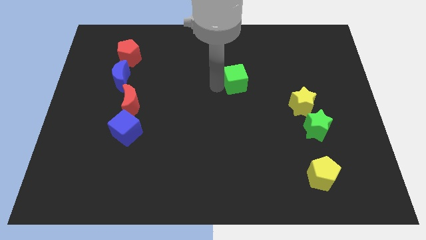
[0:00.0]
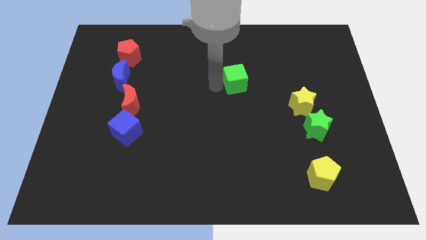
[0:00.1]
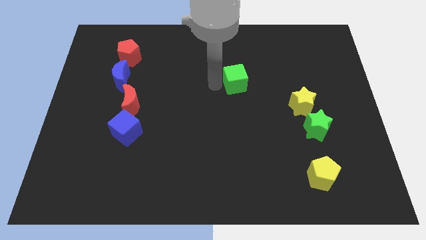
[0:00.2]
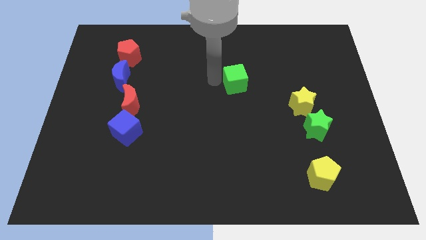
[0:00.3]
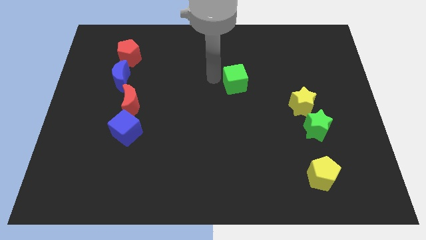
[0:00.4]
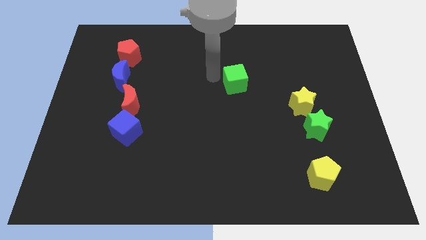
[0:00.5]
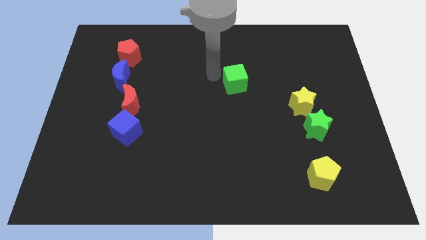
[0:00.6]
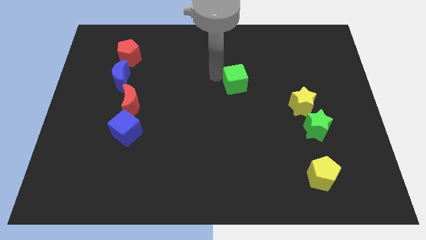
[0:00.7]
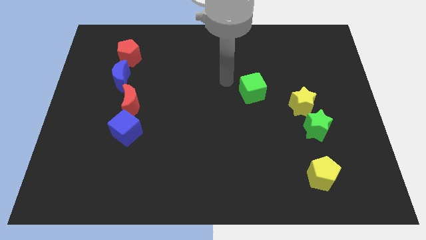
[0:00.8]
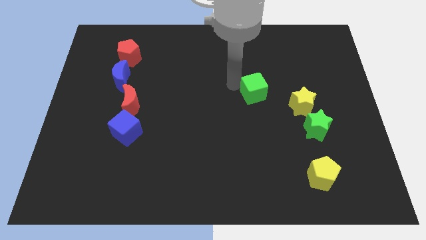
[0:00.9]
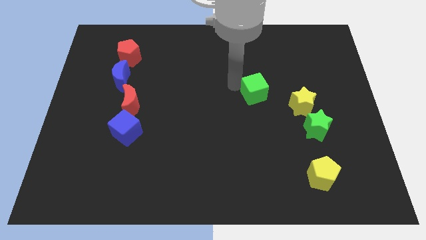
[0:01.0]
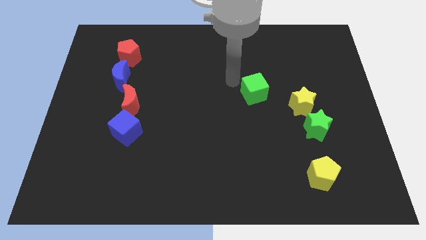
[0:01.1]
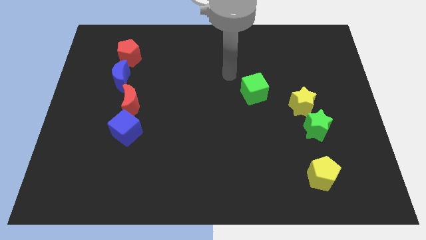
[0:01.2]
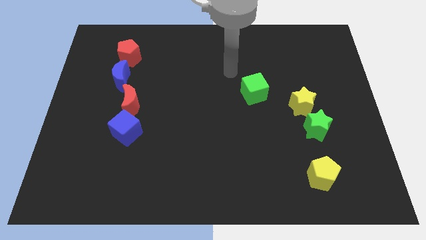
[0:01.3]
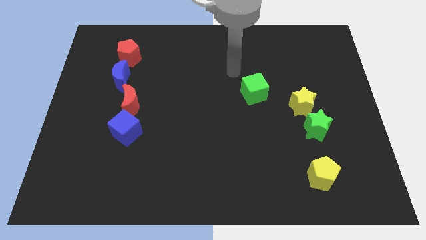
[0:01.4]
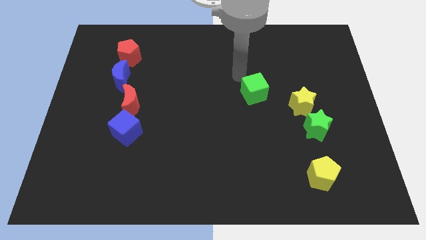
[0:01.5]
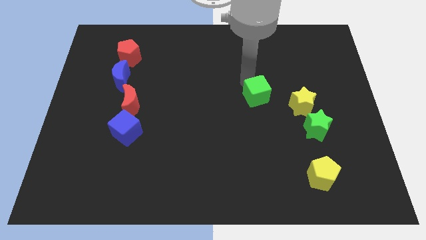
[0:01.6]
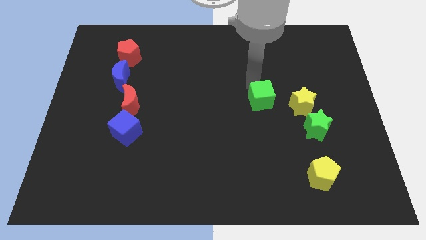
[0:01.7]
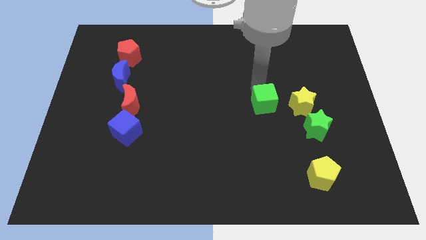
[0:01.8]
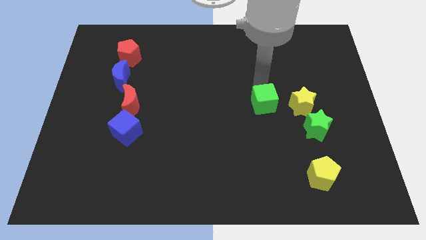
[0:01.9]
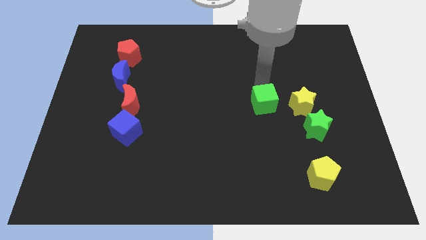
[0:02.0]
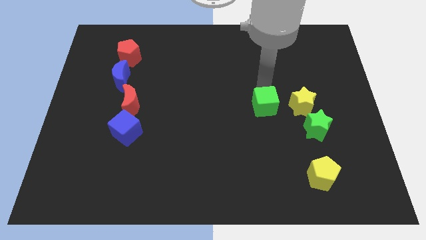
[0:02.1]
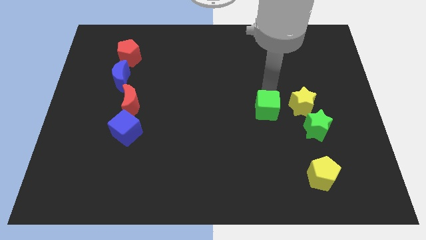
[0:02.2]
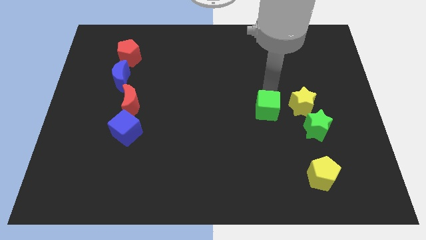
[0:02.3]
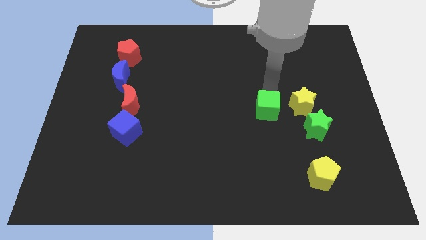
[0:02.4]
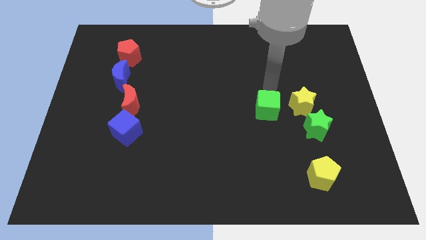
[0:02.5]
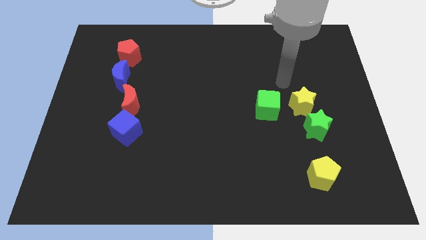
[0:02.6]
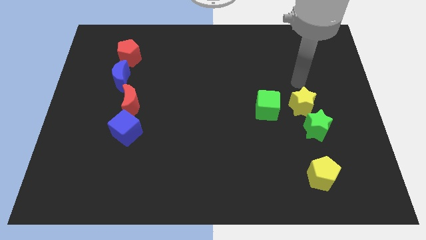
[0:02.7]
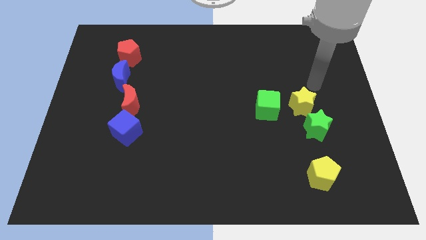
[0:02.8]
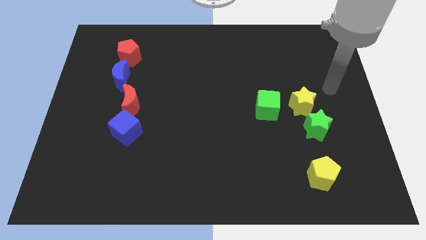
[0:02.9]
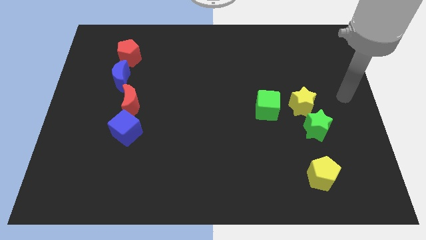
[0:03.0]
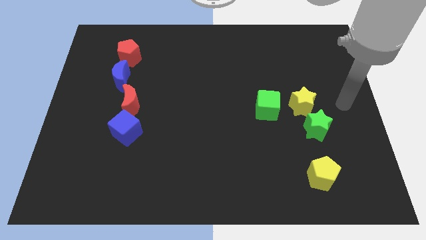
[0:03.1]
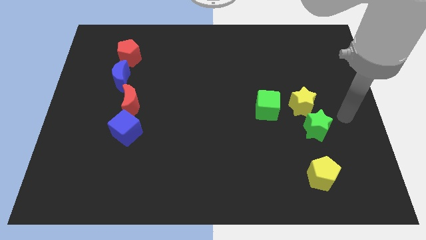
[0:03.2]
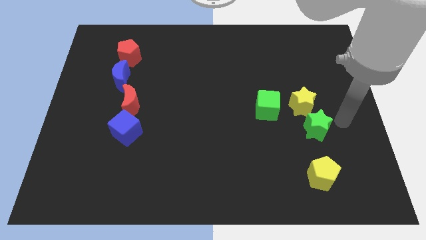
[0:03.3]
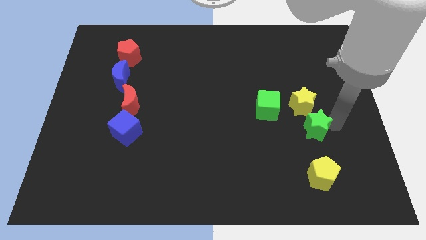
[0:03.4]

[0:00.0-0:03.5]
place the green cube to the left of the yellow star

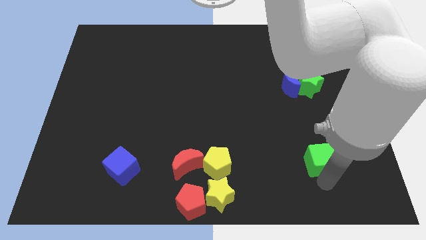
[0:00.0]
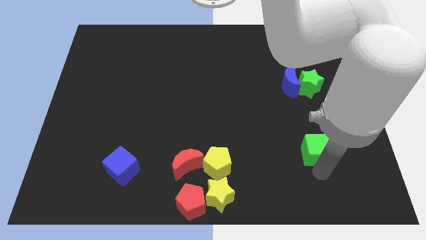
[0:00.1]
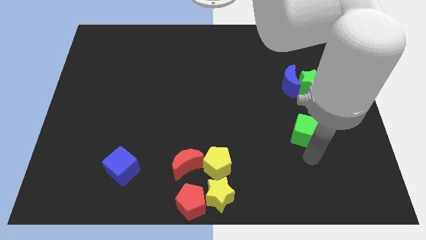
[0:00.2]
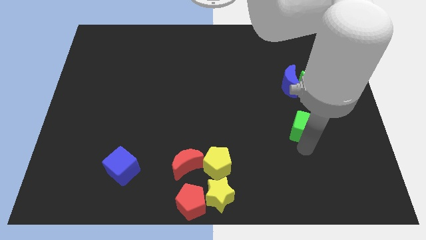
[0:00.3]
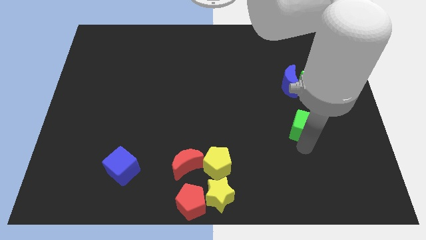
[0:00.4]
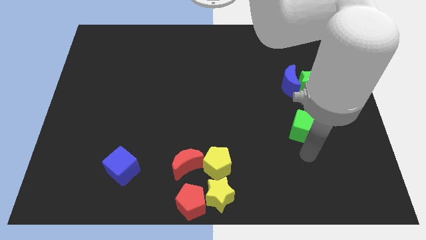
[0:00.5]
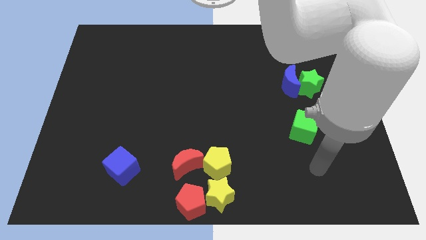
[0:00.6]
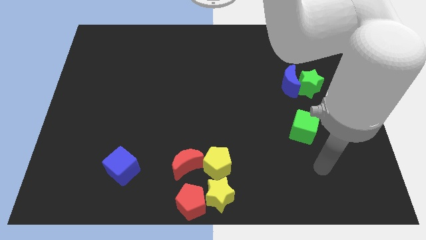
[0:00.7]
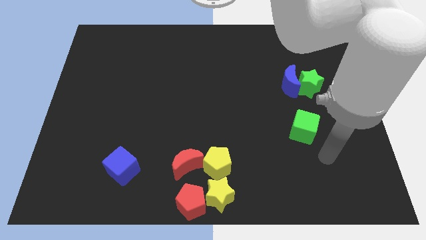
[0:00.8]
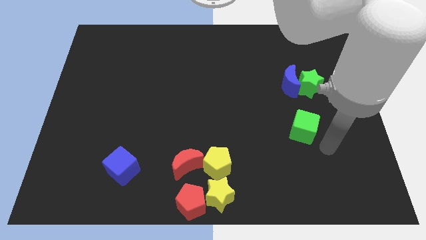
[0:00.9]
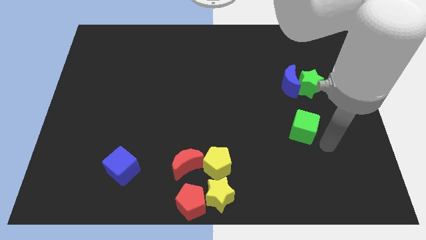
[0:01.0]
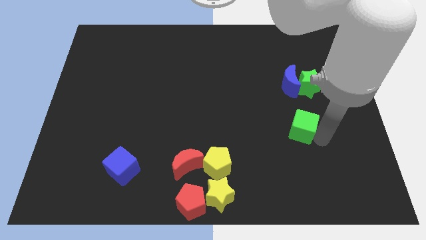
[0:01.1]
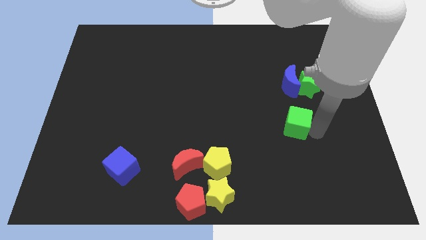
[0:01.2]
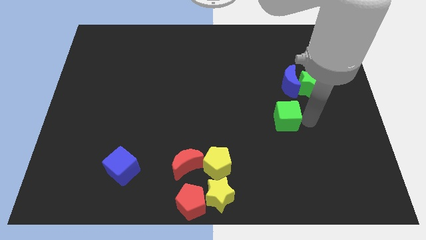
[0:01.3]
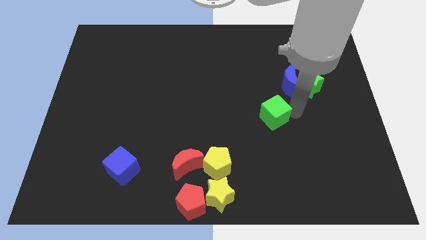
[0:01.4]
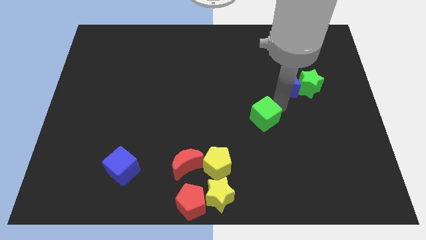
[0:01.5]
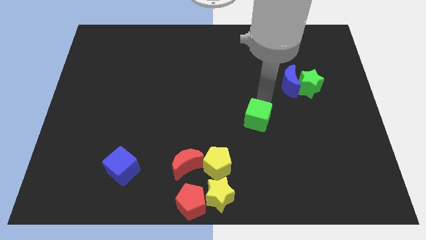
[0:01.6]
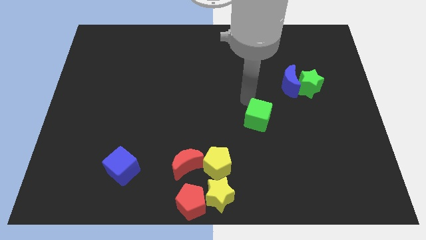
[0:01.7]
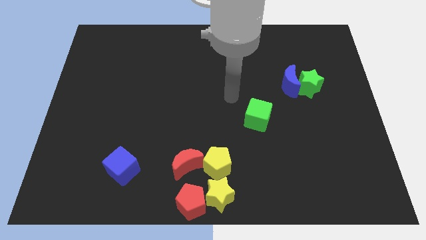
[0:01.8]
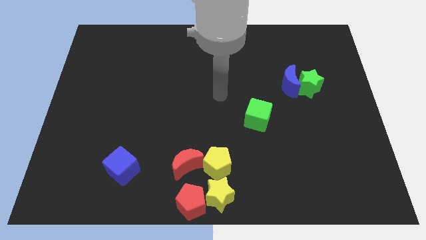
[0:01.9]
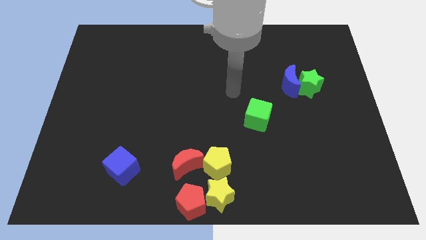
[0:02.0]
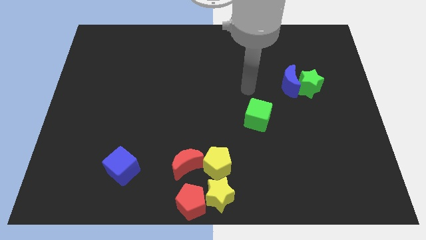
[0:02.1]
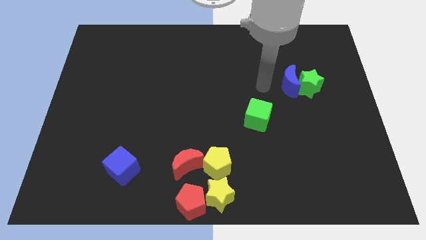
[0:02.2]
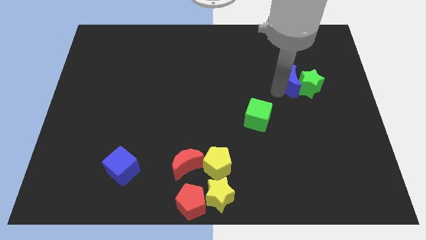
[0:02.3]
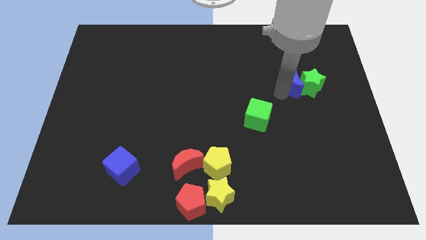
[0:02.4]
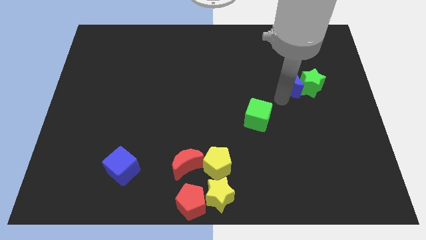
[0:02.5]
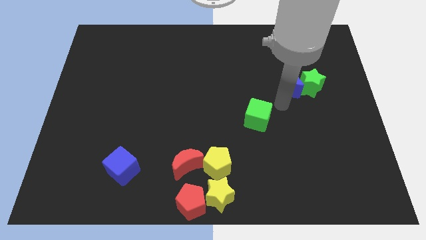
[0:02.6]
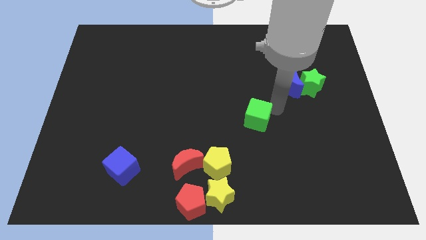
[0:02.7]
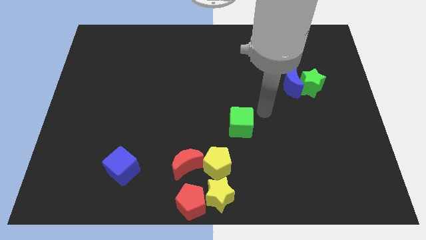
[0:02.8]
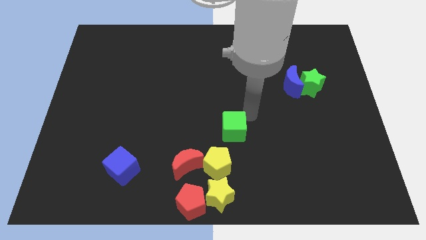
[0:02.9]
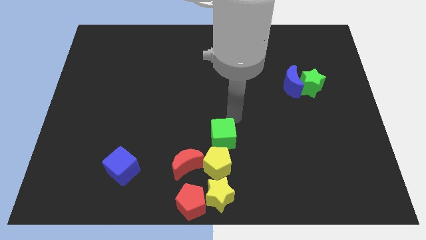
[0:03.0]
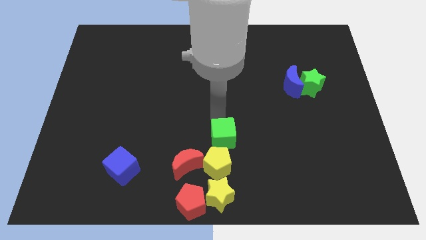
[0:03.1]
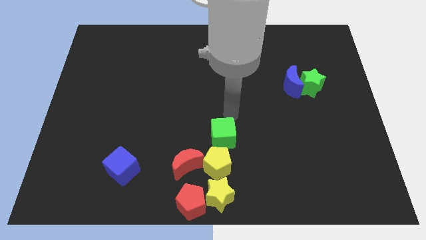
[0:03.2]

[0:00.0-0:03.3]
place green cube to the top of yellow pentagon

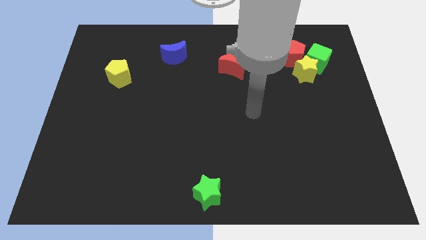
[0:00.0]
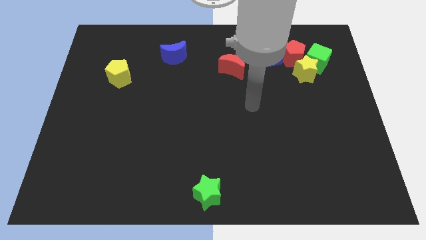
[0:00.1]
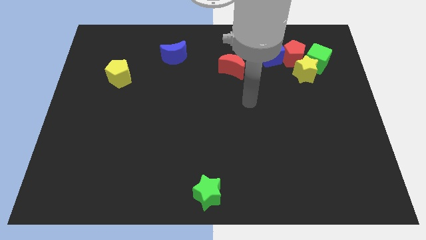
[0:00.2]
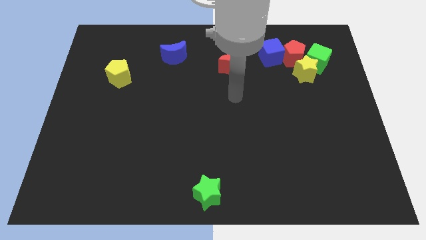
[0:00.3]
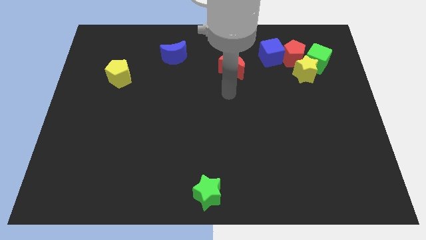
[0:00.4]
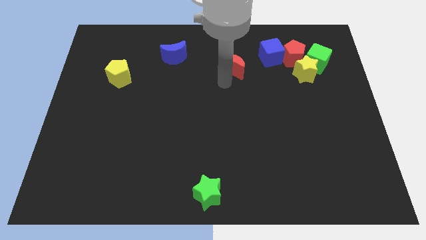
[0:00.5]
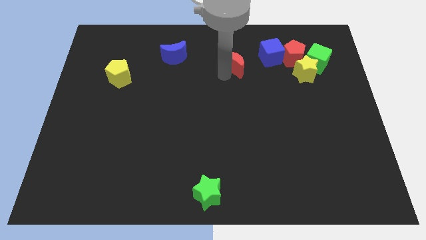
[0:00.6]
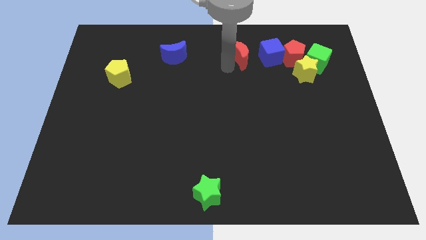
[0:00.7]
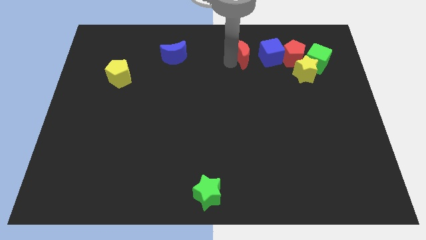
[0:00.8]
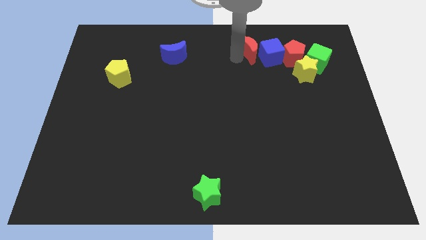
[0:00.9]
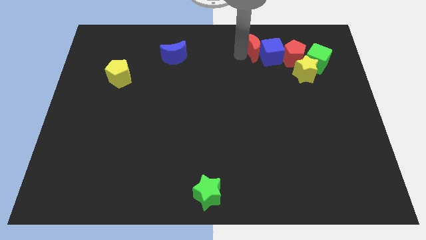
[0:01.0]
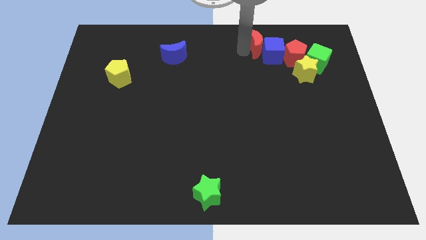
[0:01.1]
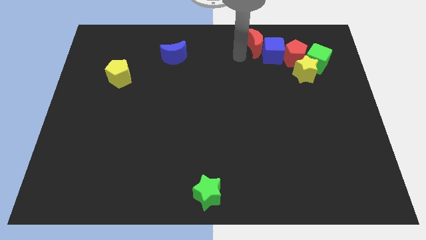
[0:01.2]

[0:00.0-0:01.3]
push the red crescent into the blue cube

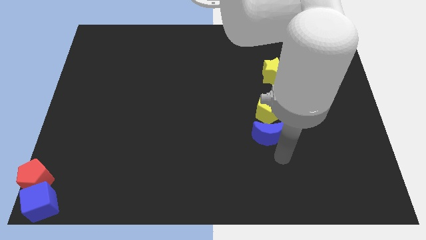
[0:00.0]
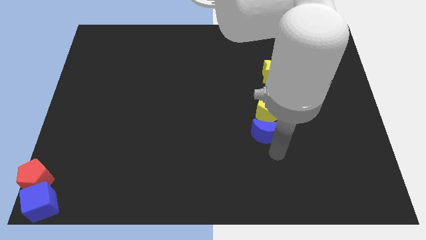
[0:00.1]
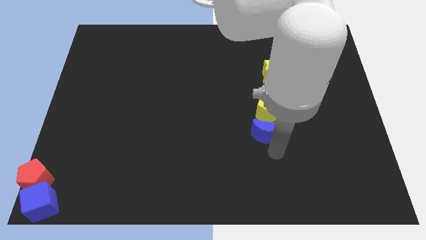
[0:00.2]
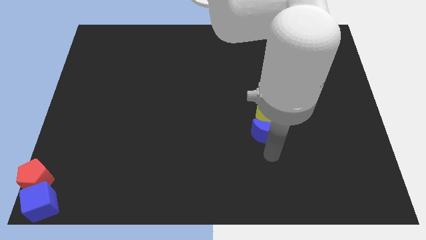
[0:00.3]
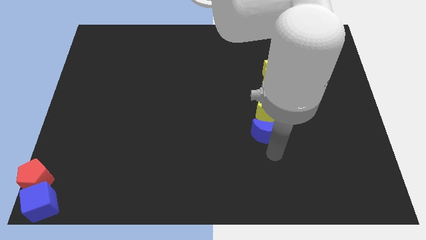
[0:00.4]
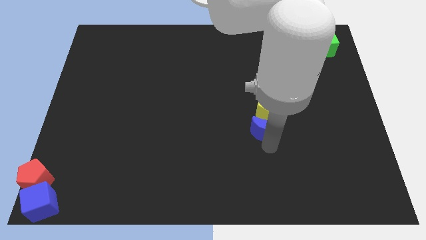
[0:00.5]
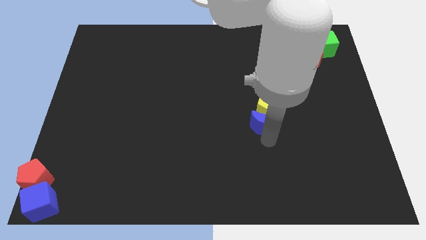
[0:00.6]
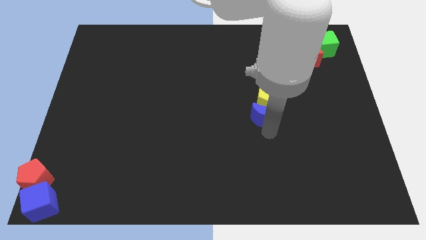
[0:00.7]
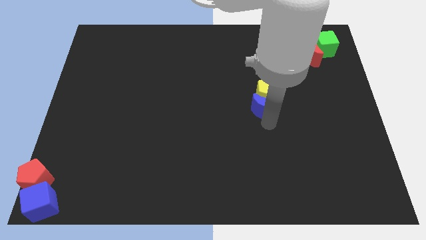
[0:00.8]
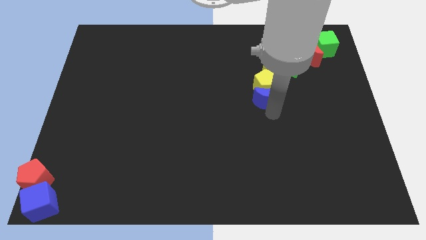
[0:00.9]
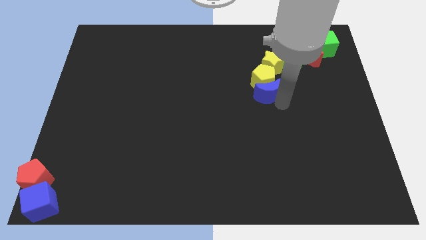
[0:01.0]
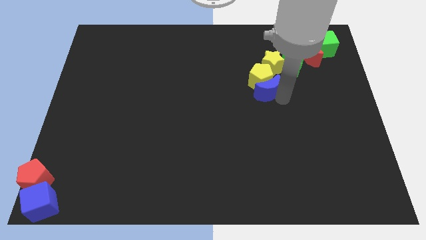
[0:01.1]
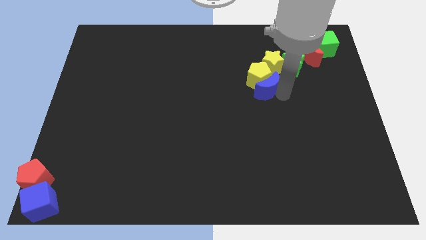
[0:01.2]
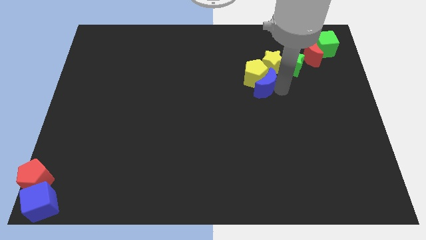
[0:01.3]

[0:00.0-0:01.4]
move the blue moon along with the yellow pentagon near to the group of blocks
